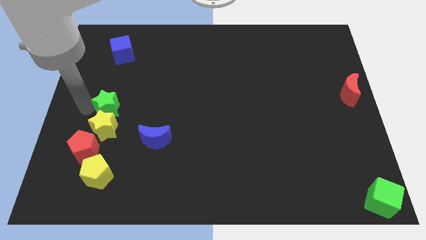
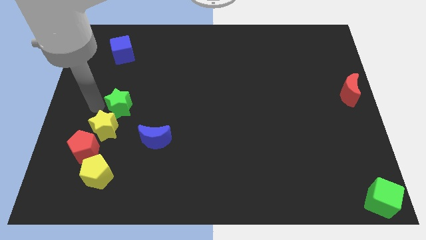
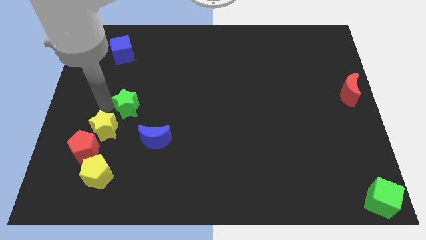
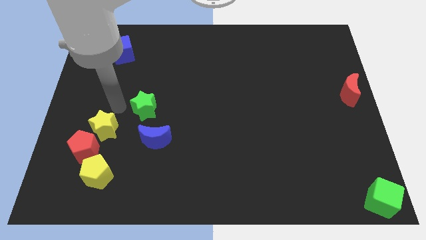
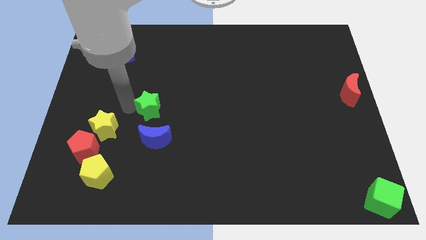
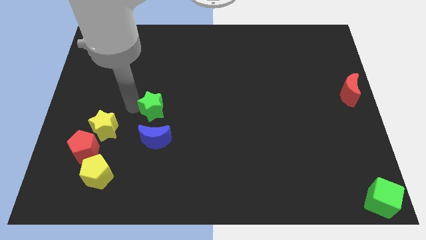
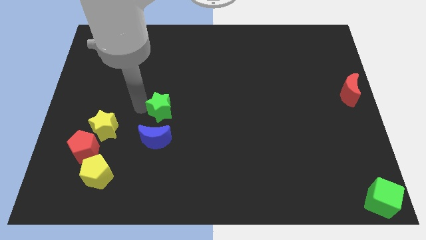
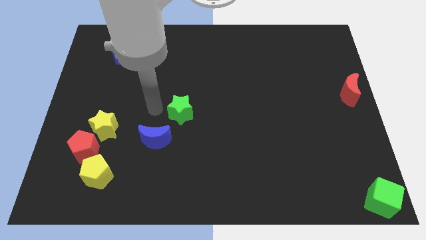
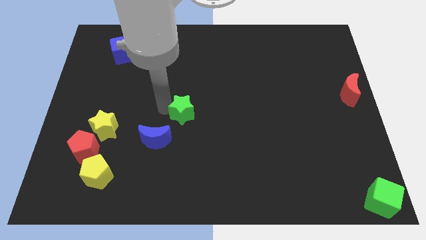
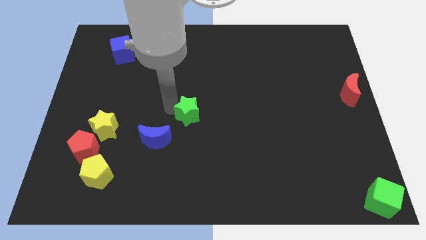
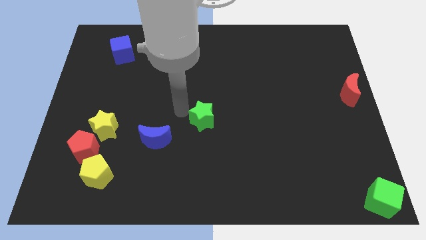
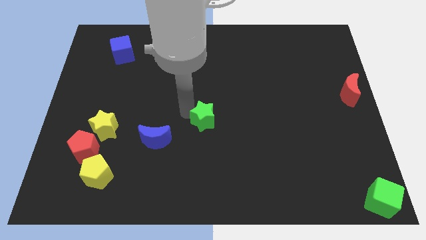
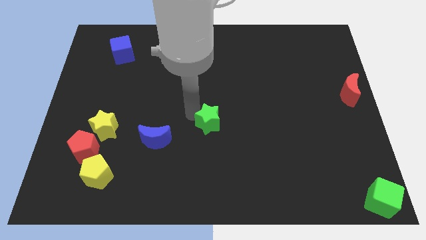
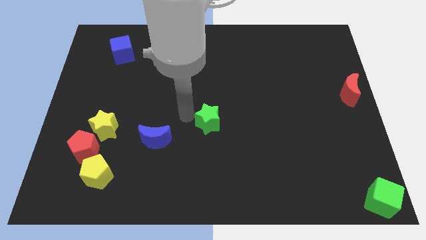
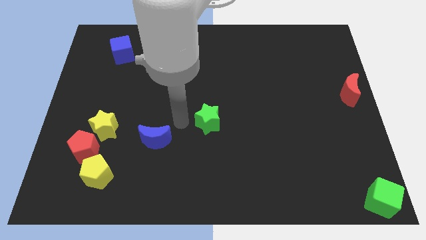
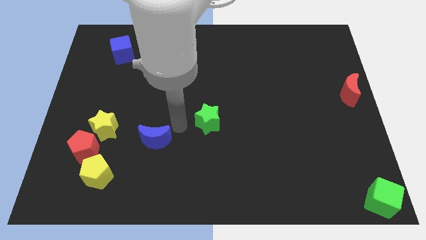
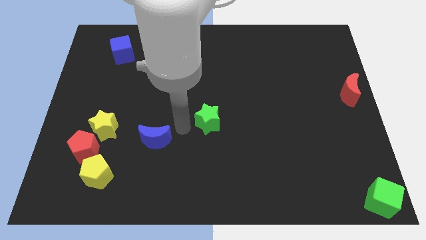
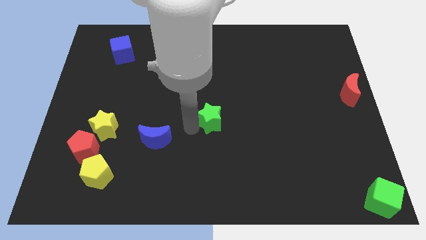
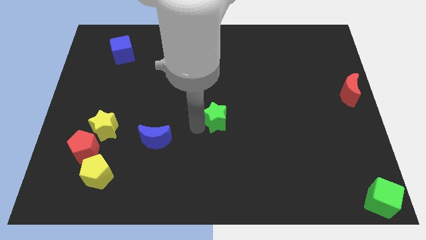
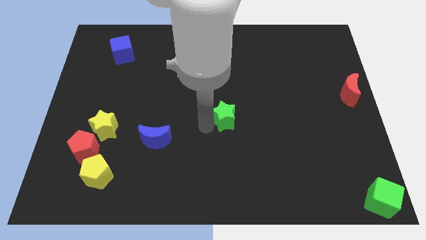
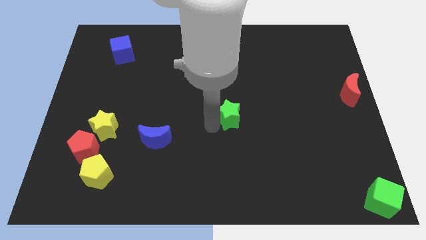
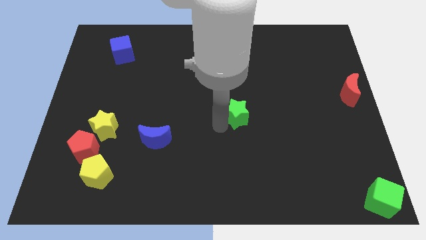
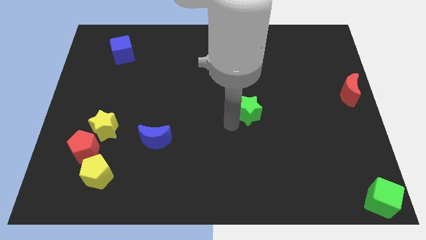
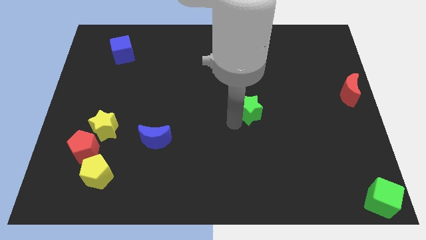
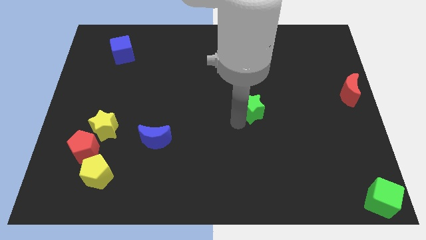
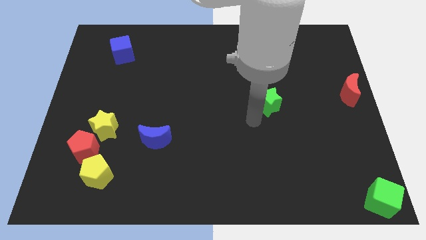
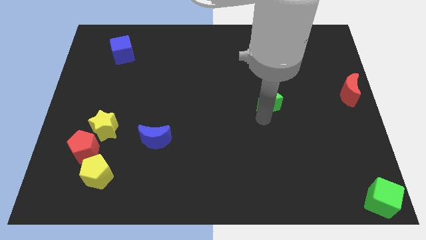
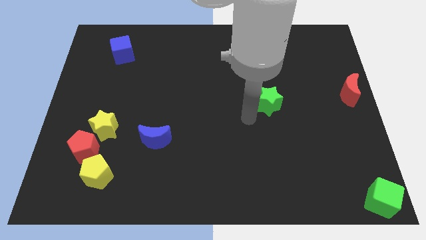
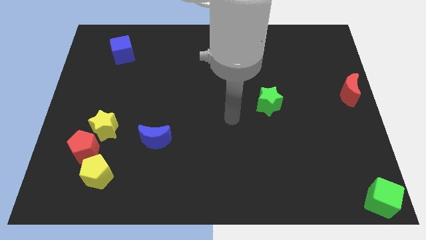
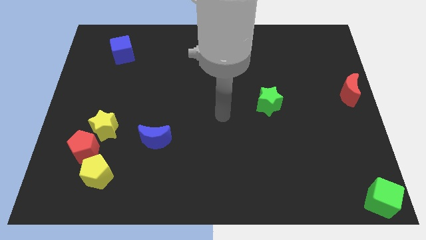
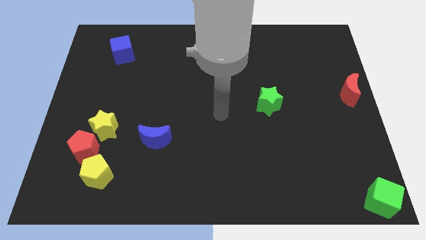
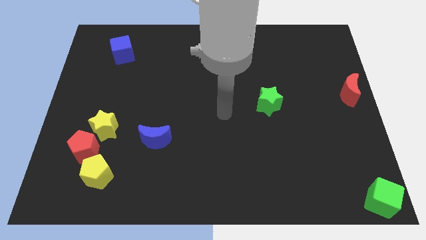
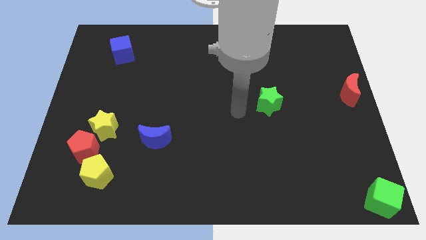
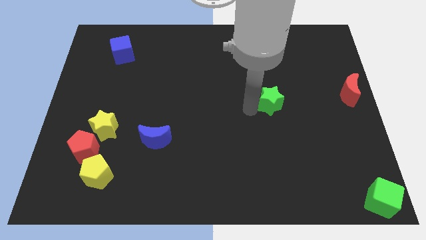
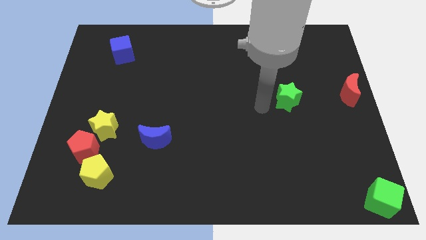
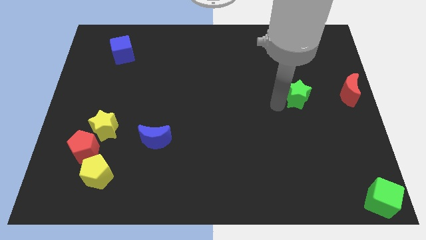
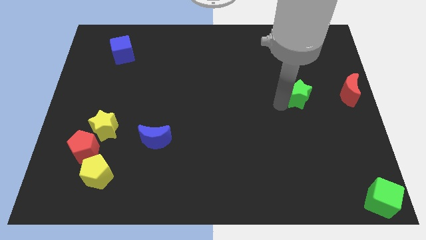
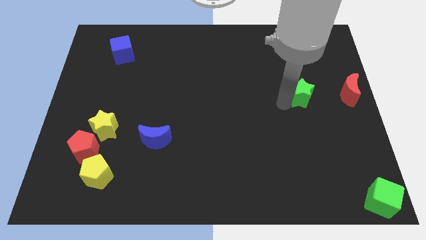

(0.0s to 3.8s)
push green star to its right

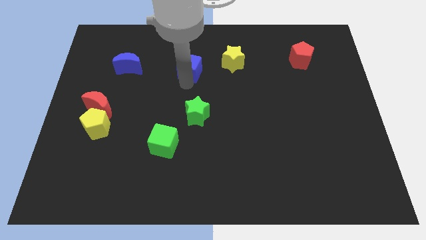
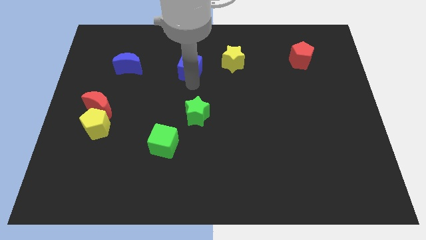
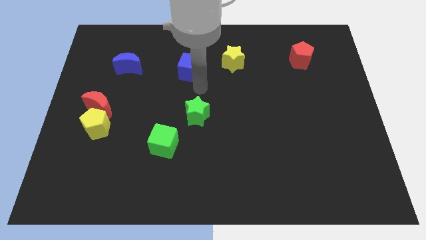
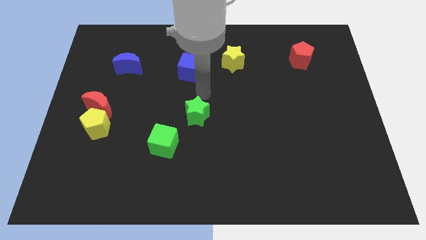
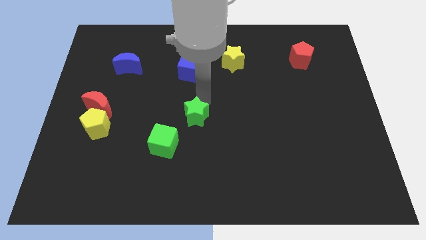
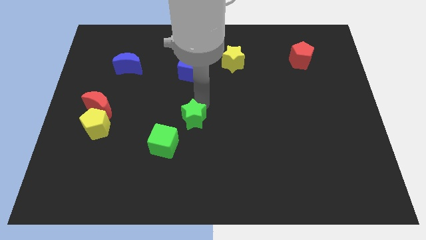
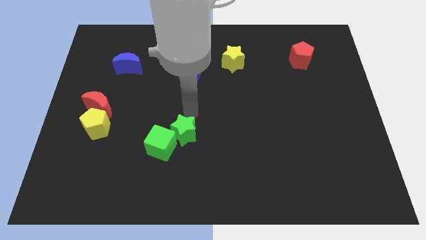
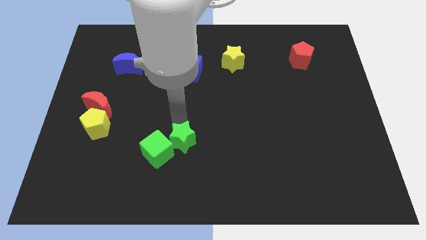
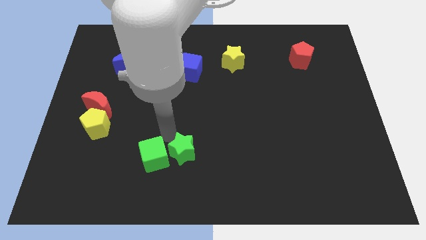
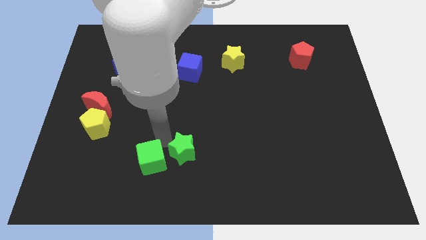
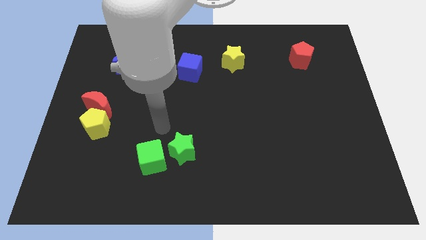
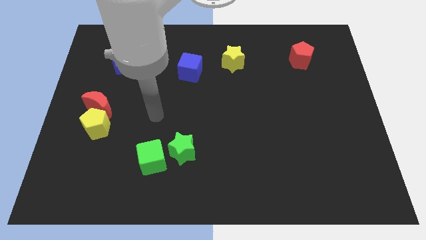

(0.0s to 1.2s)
push the green star to the right of the green cube

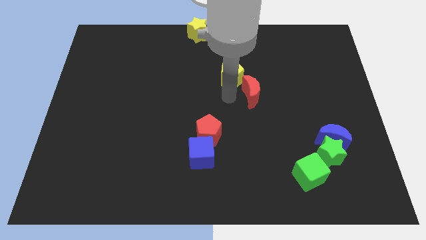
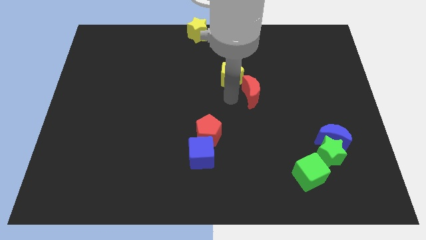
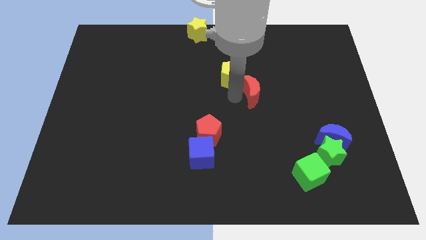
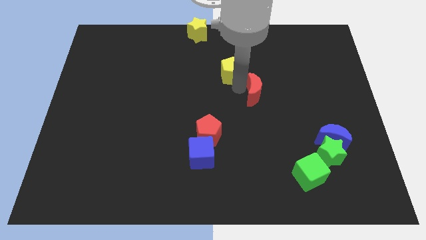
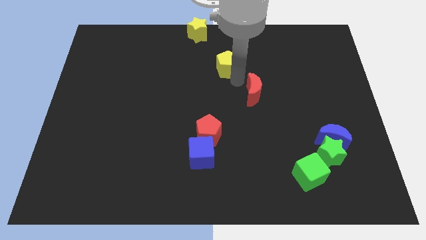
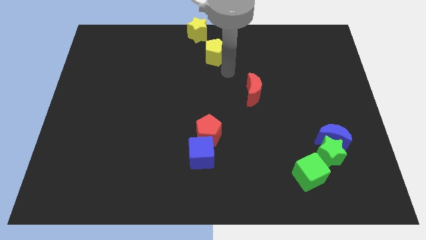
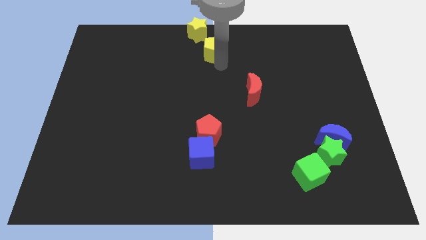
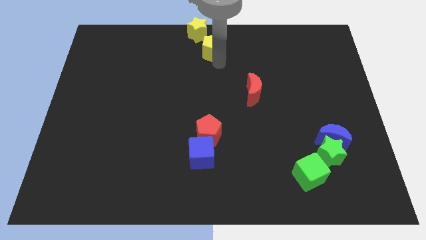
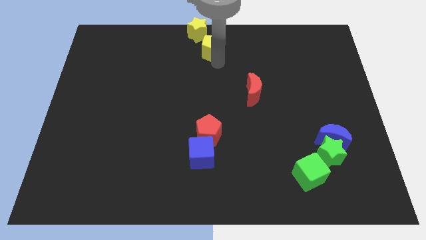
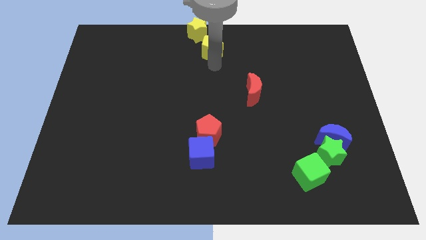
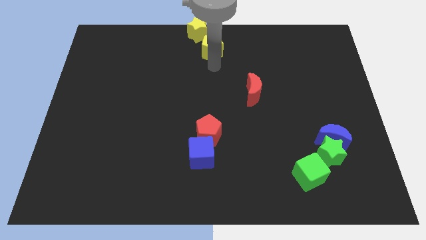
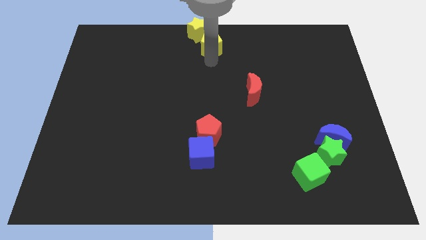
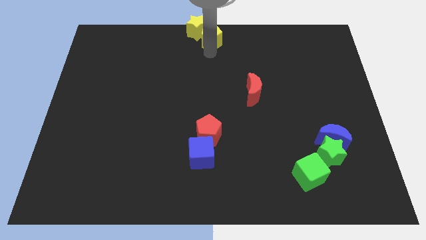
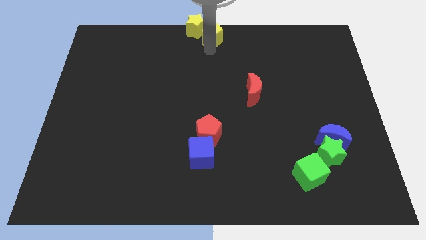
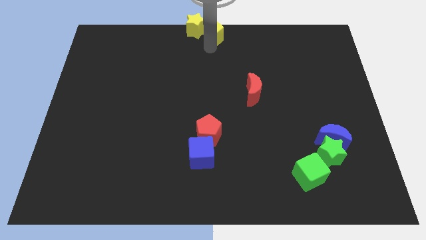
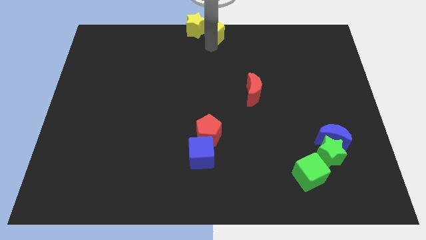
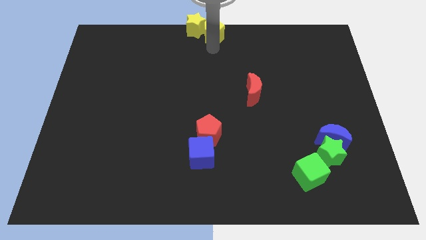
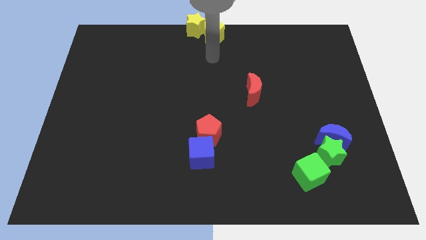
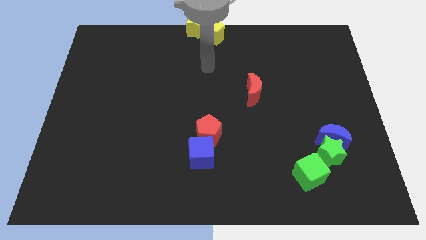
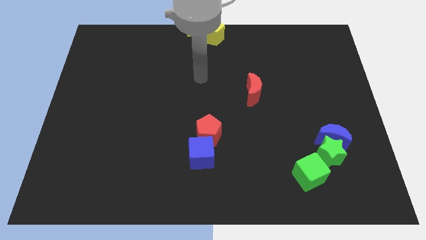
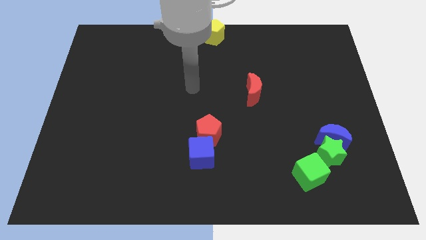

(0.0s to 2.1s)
push yellow pentagon into yellow star

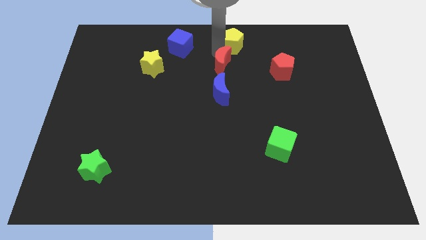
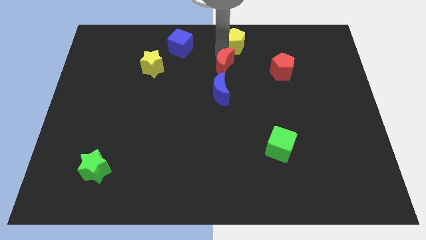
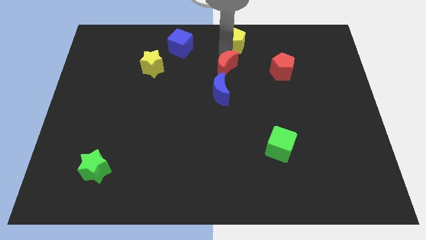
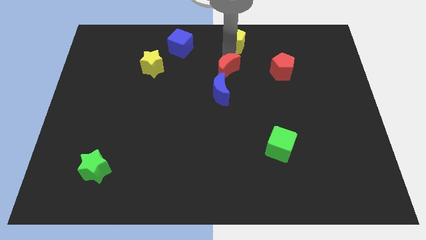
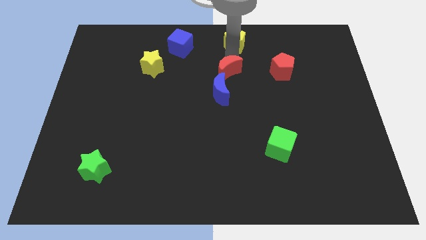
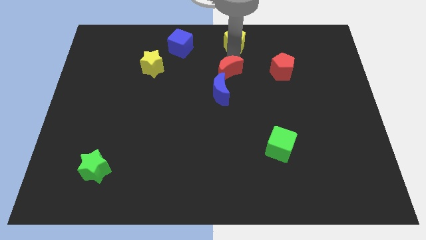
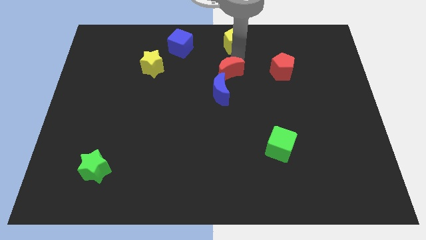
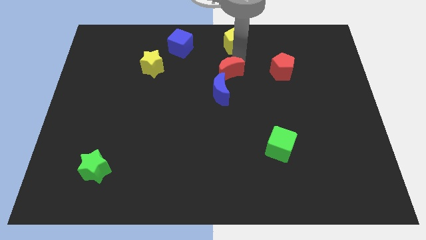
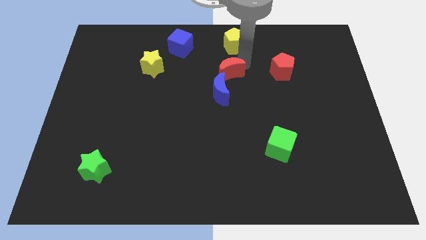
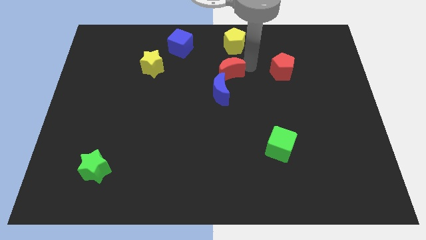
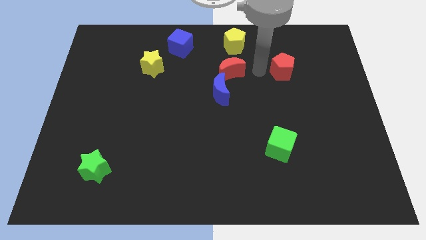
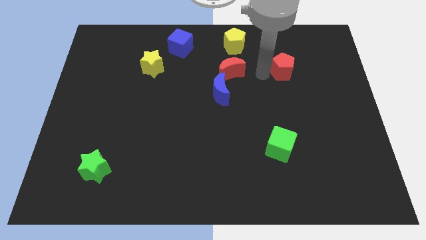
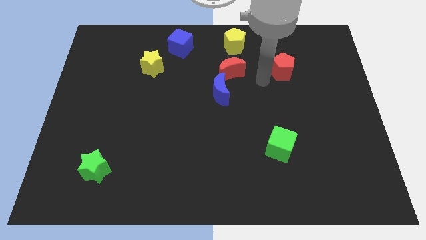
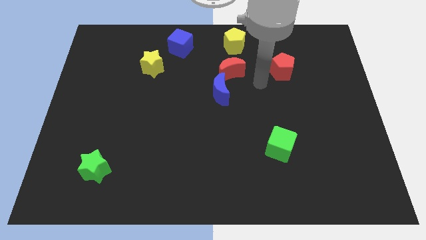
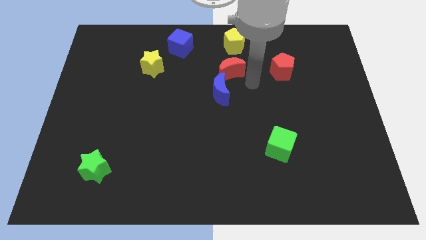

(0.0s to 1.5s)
place the red crescent close to the blue crescent

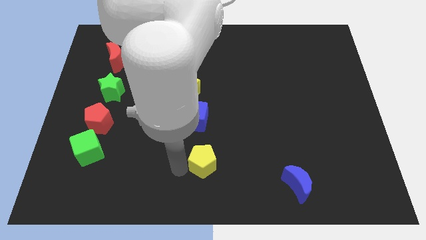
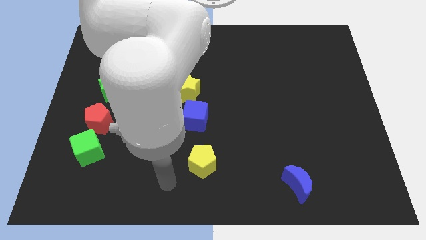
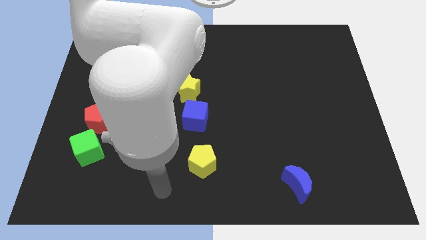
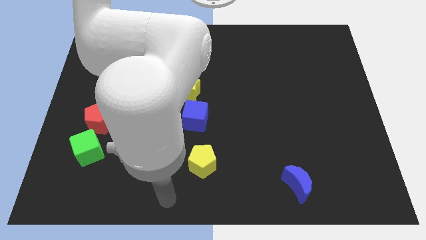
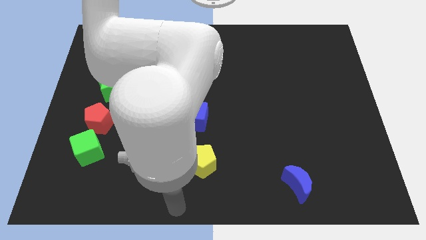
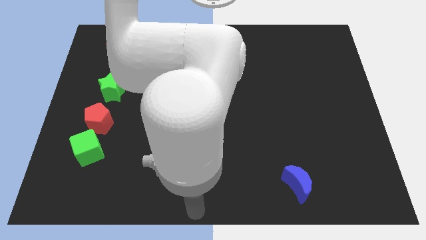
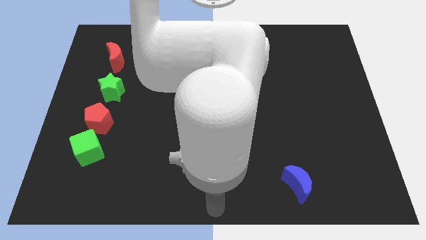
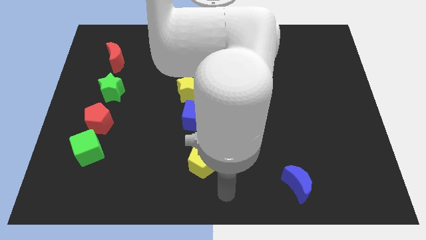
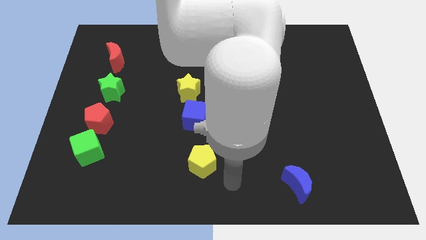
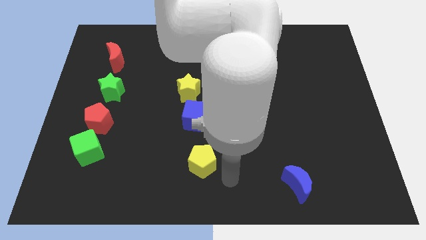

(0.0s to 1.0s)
move your hand towards the yellow pentagon
